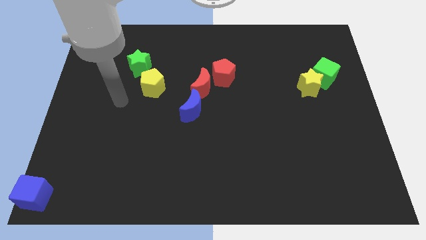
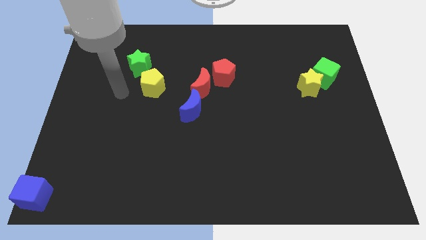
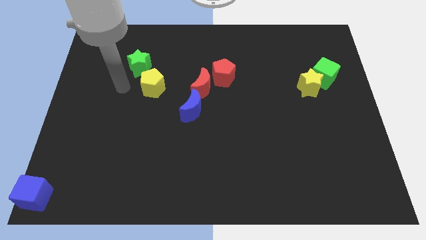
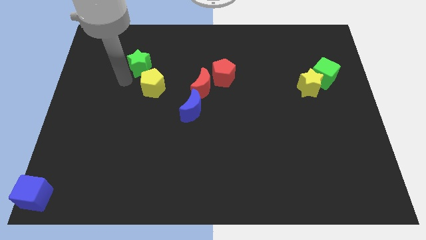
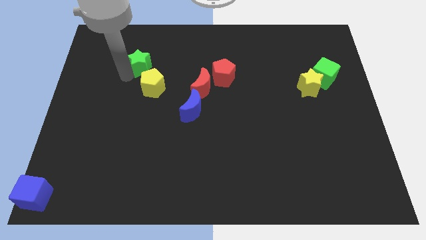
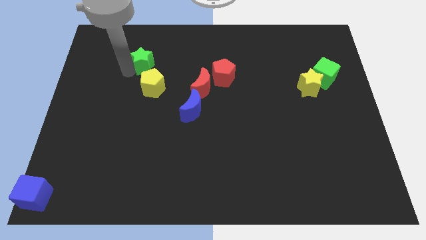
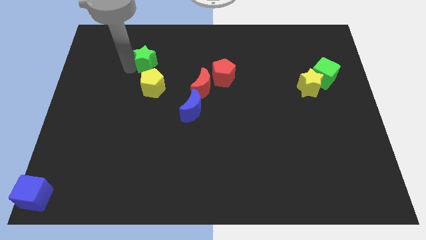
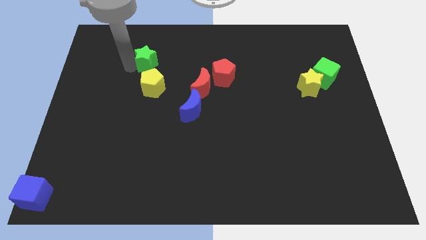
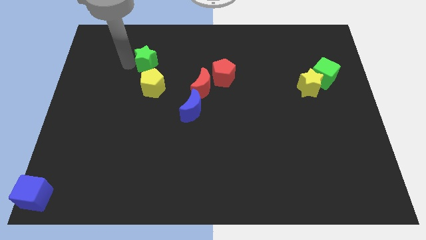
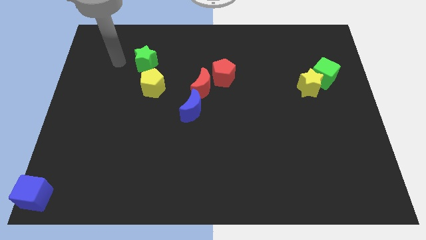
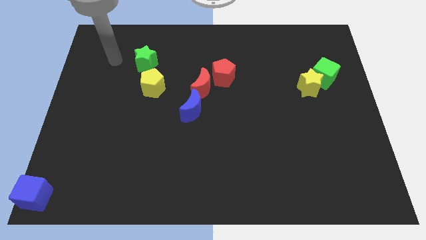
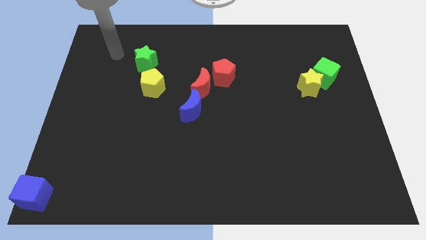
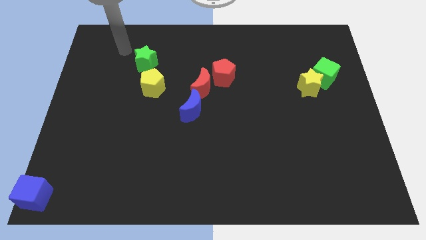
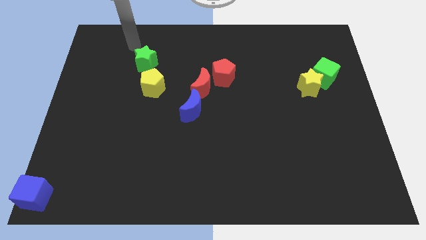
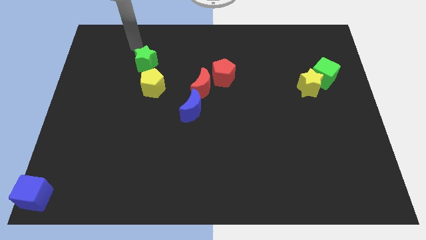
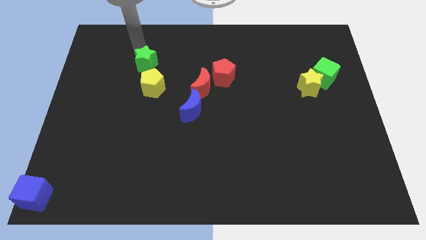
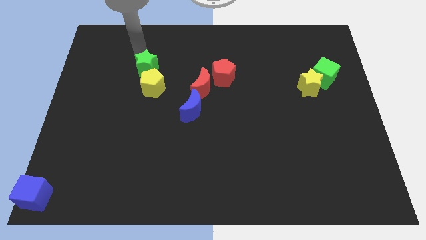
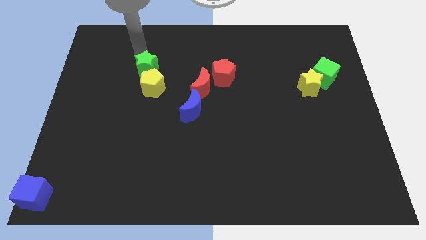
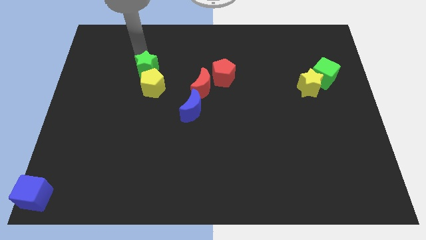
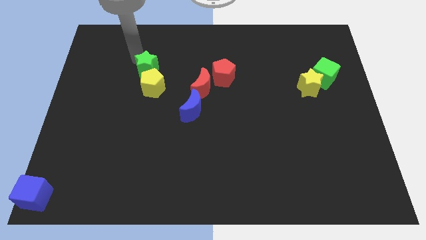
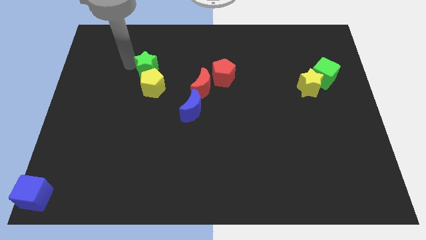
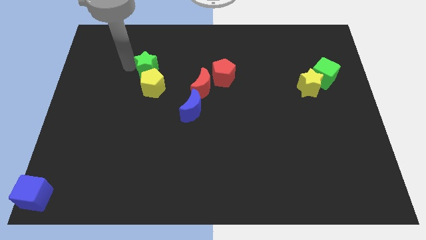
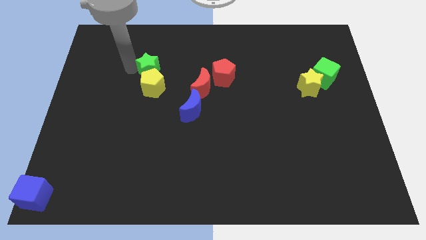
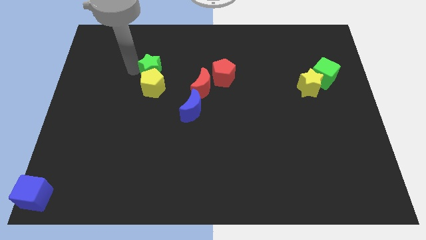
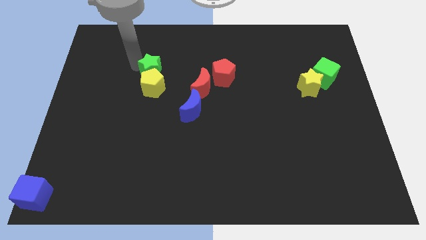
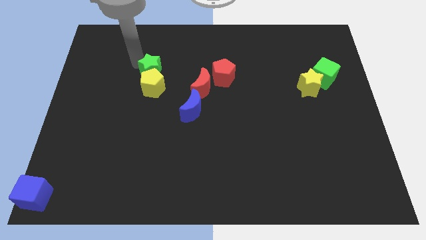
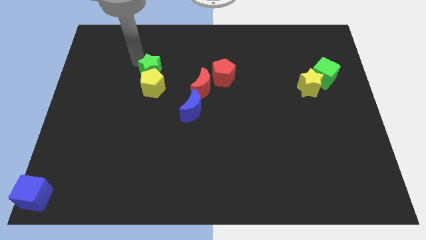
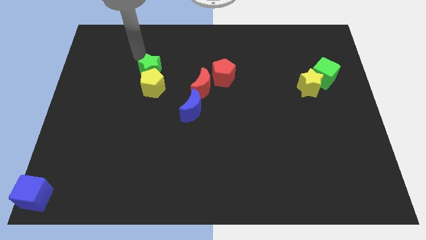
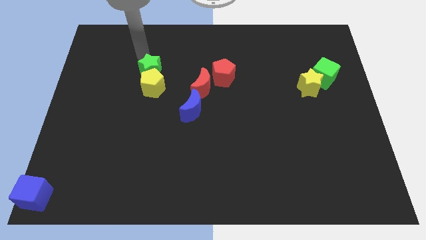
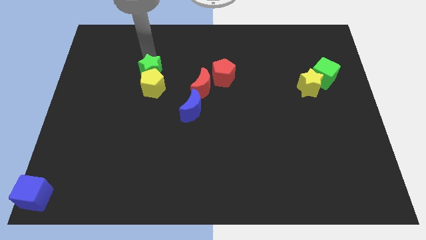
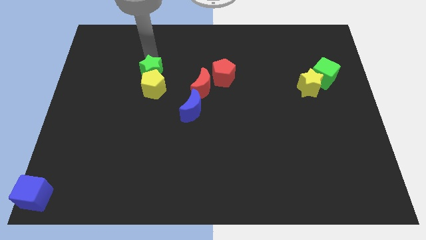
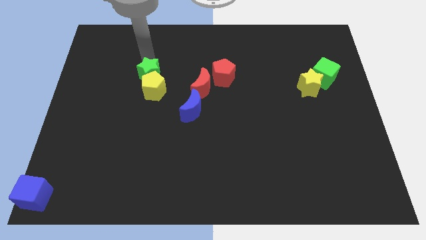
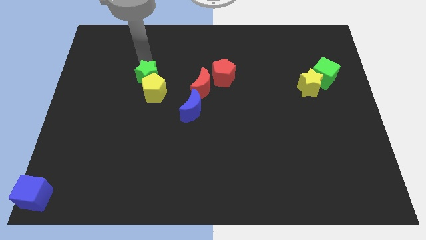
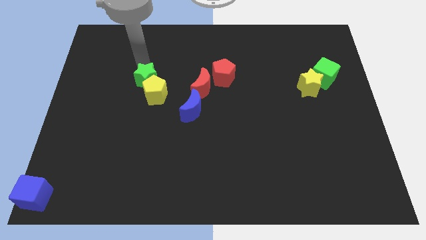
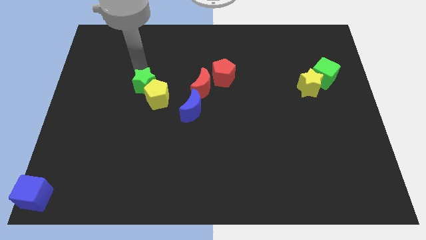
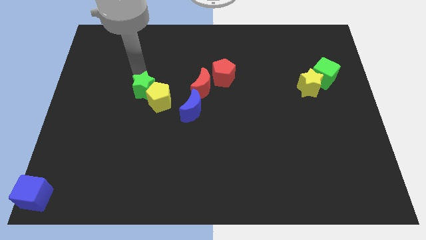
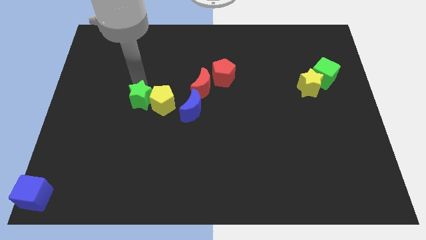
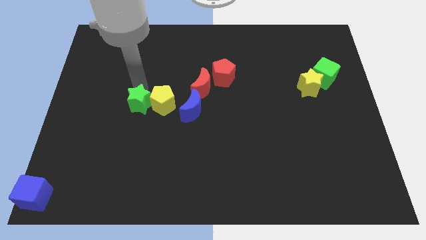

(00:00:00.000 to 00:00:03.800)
slide the green star along with the yellow pentagon towards the blue moon

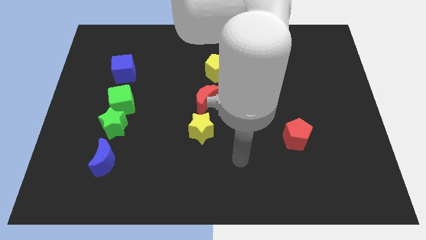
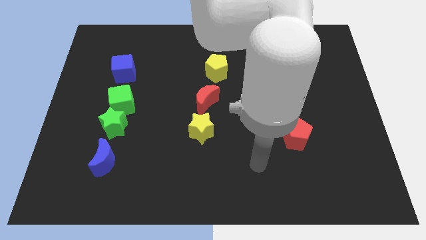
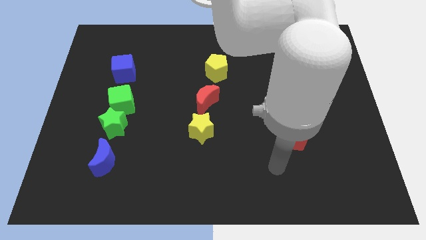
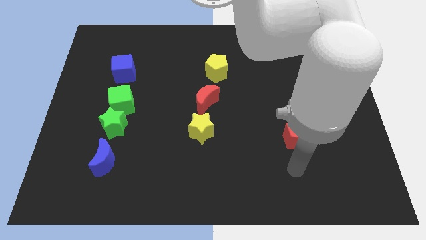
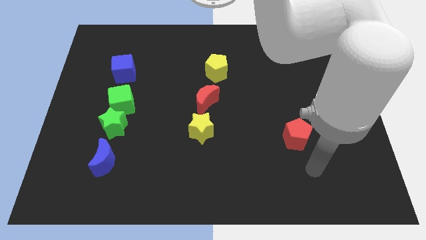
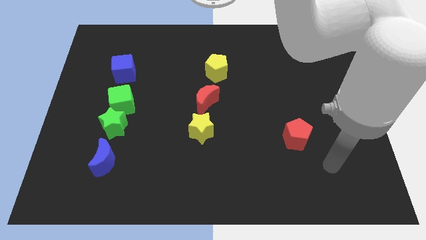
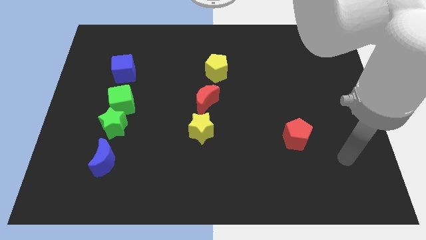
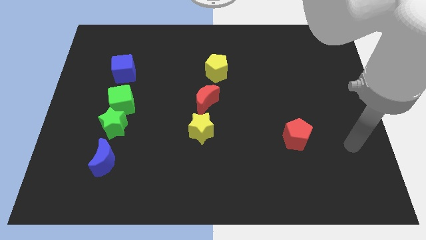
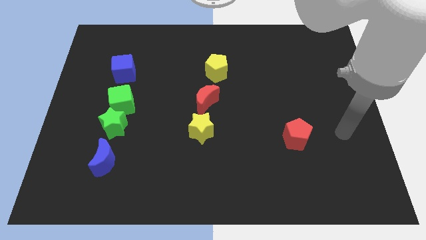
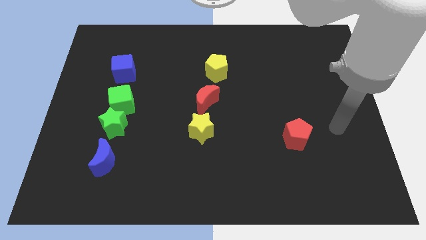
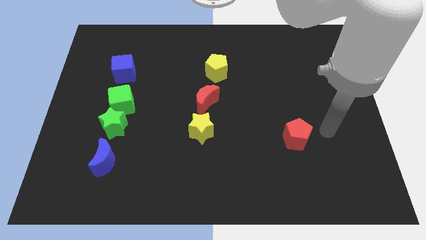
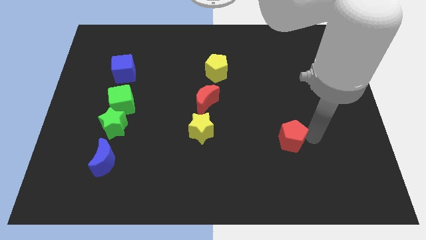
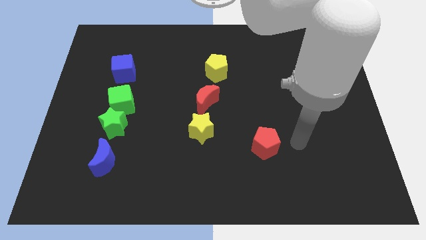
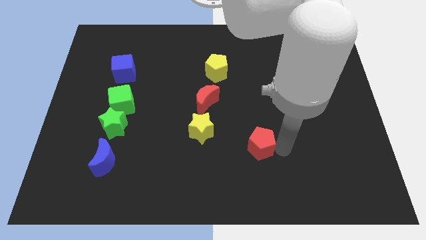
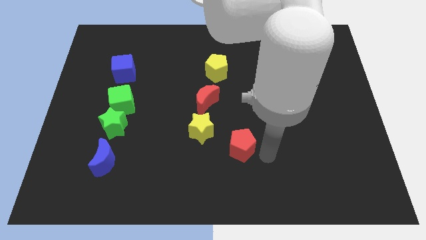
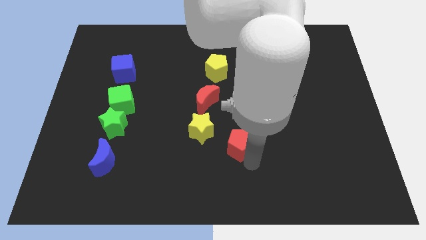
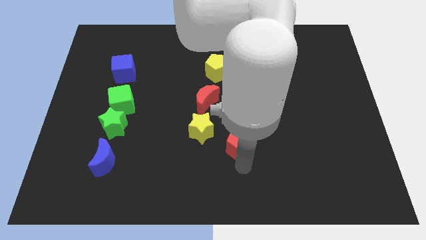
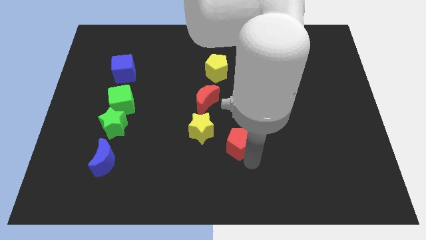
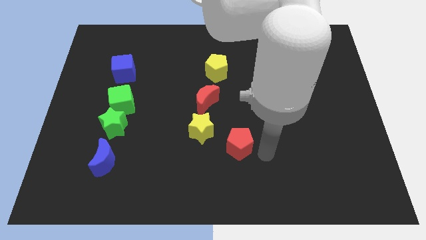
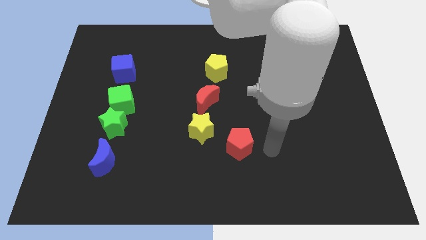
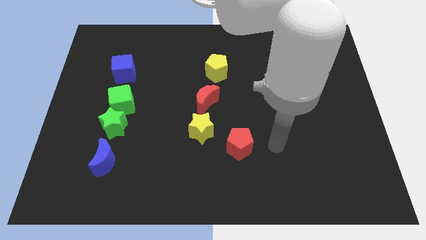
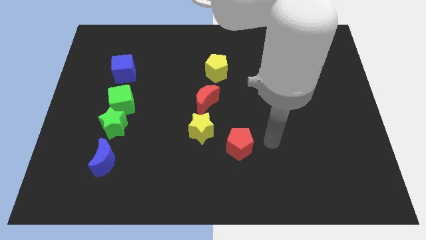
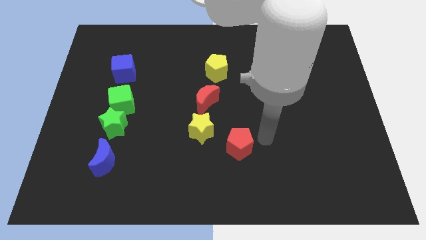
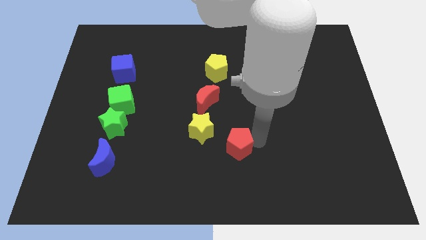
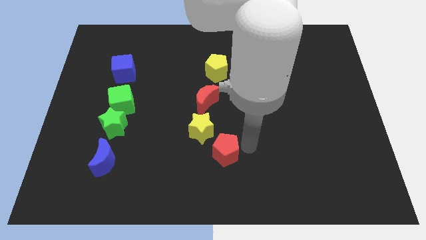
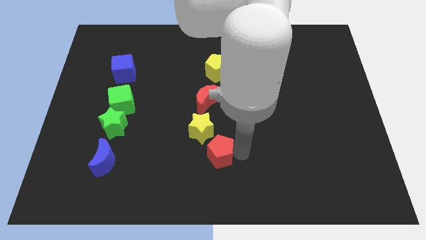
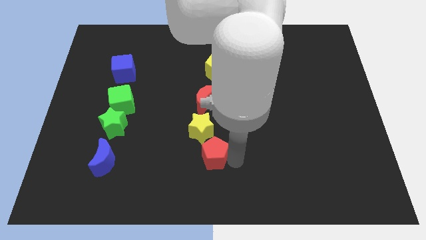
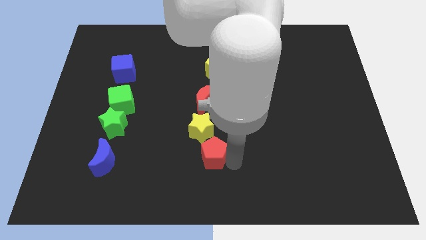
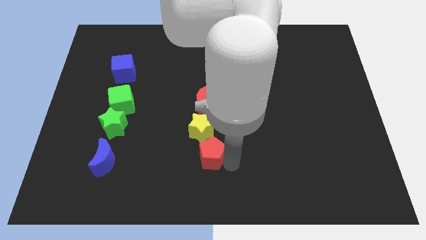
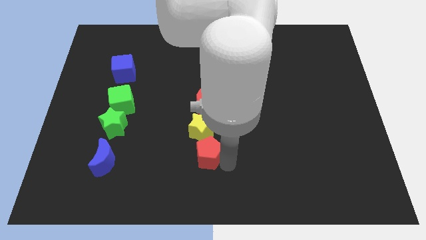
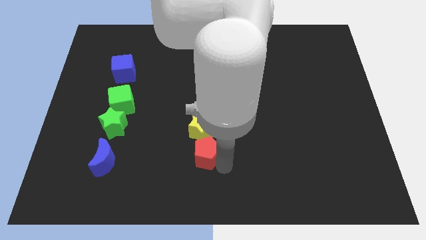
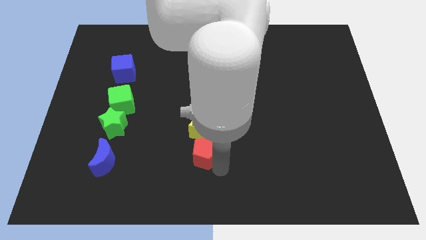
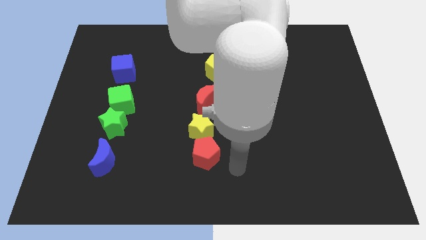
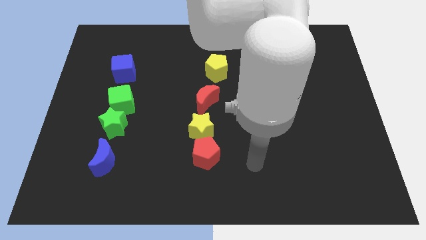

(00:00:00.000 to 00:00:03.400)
push the red pentagon to the bottom of the yellow star

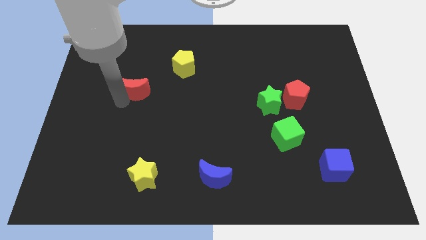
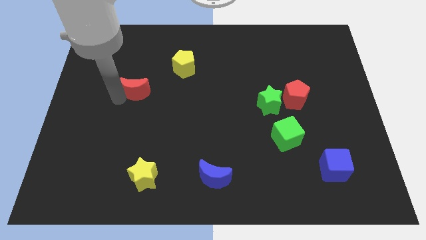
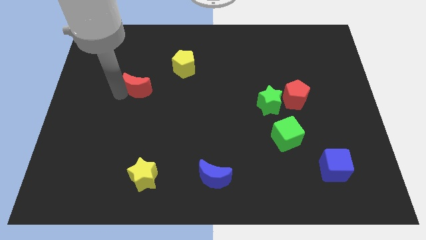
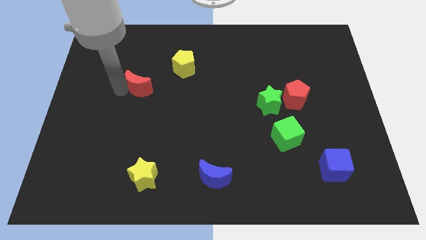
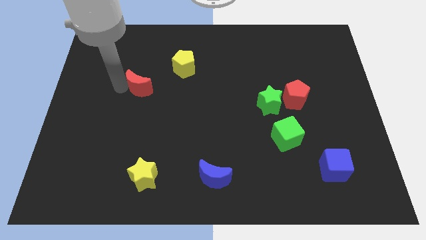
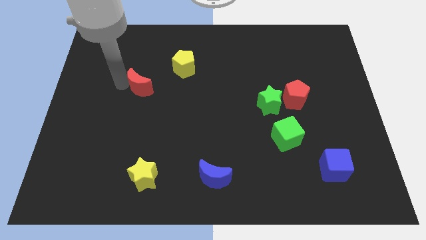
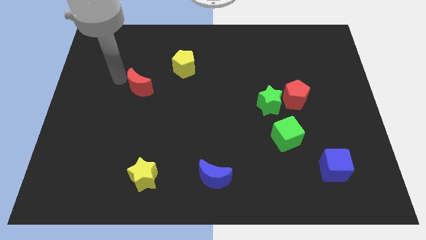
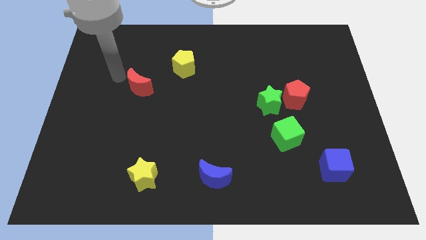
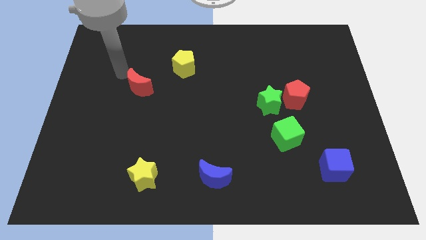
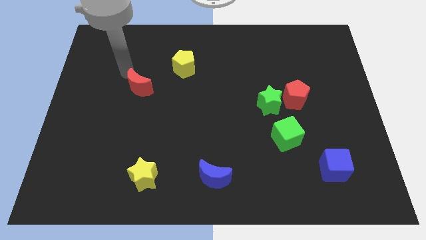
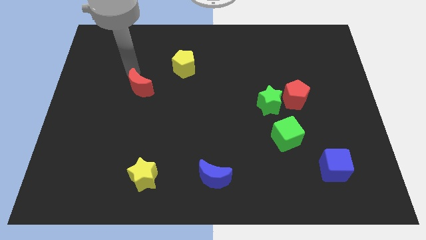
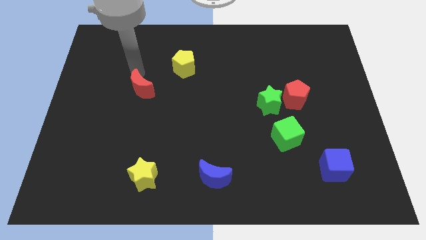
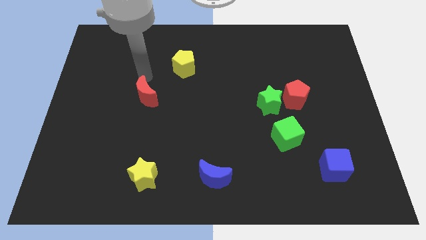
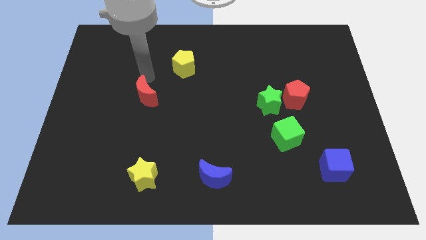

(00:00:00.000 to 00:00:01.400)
move the red moon above the yellow star

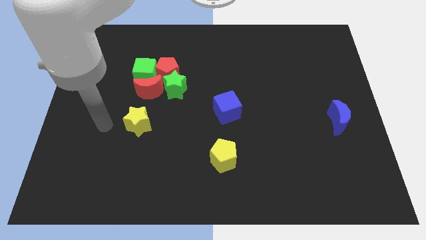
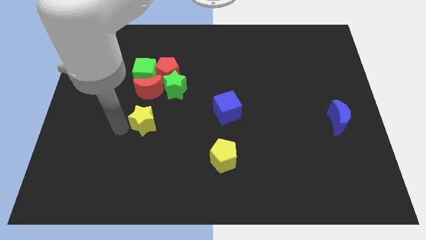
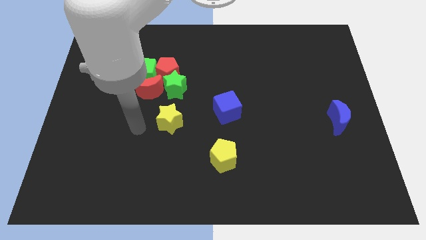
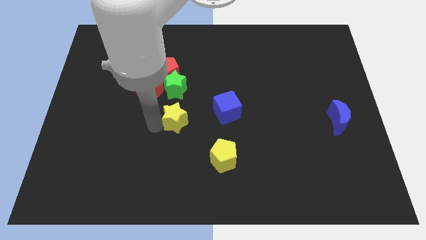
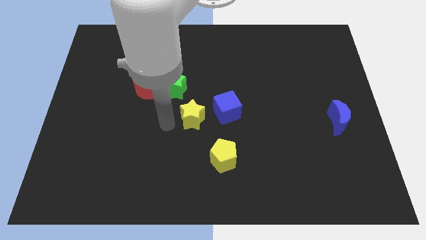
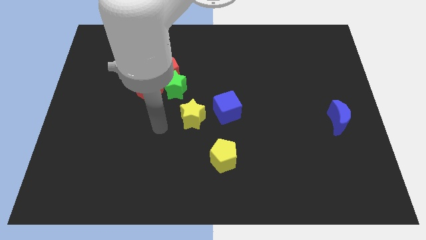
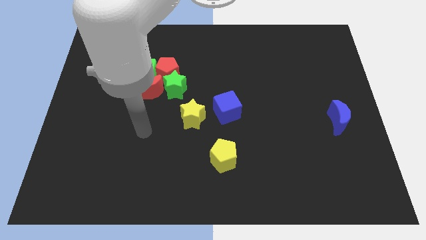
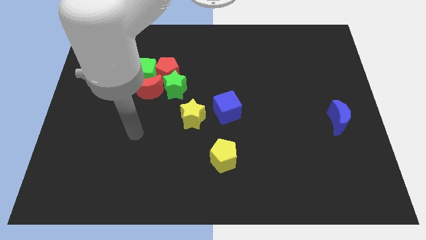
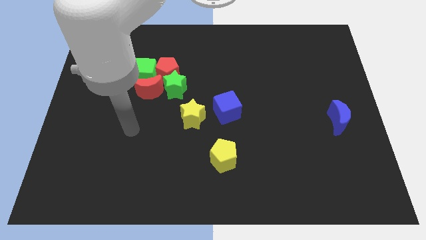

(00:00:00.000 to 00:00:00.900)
push the yellow star to the right
